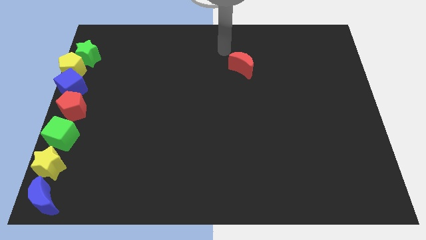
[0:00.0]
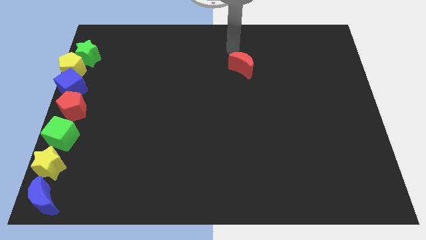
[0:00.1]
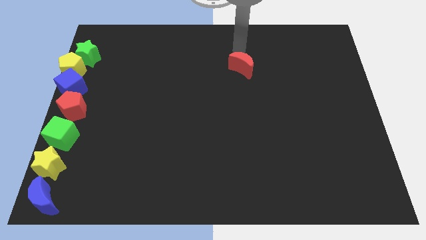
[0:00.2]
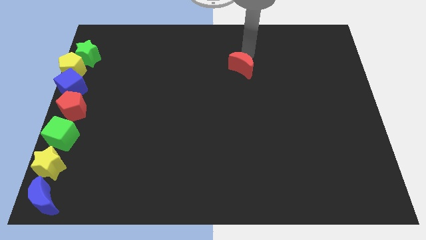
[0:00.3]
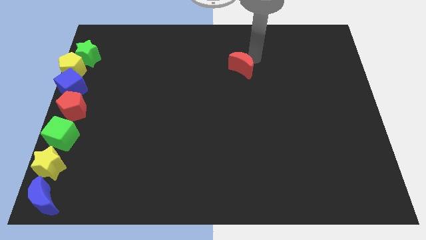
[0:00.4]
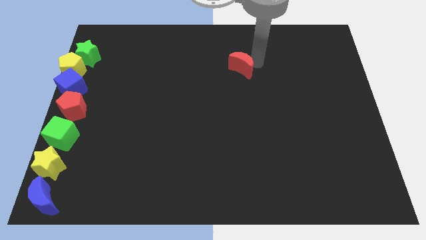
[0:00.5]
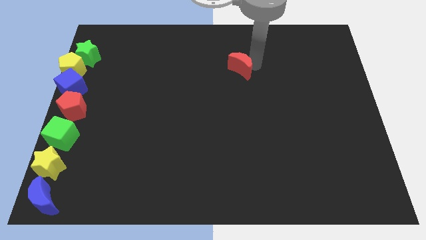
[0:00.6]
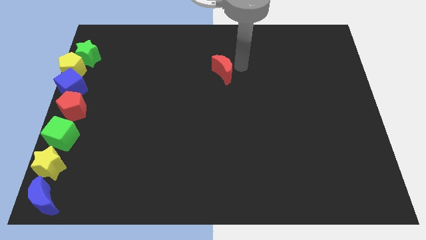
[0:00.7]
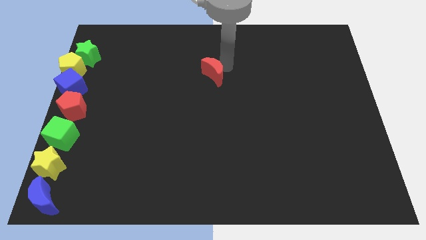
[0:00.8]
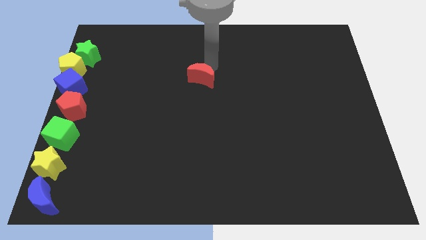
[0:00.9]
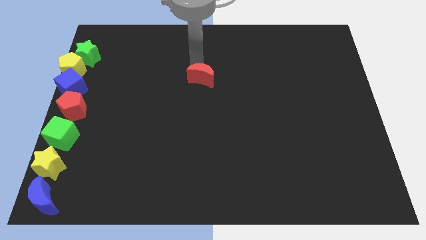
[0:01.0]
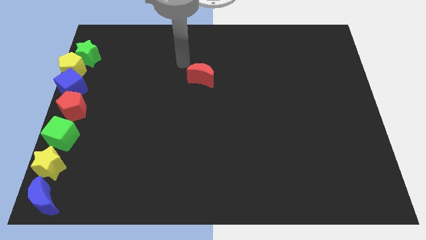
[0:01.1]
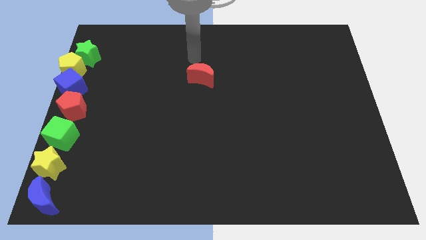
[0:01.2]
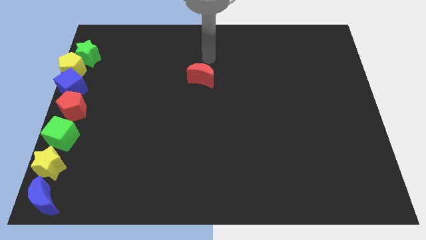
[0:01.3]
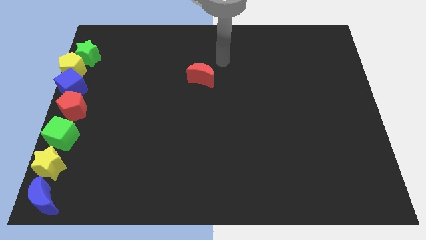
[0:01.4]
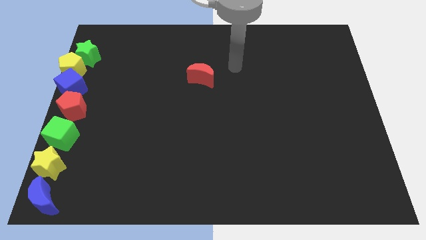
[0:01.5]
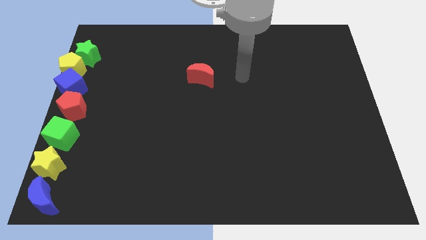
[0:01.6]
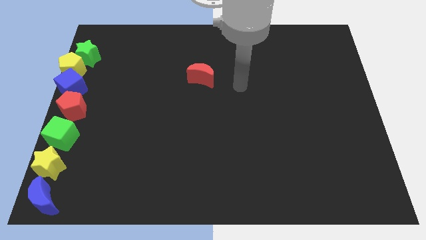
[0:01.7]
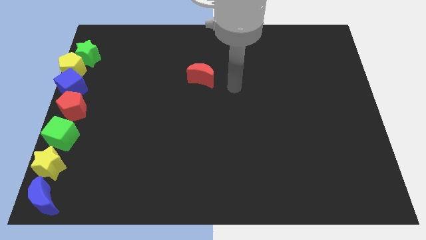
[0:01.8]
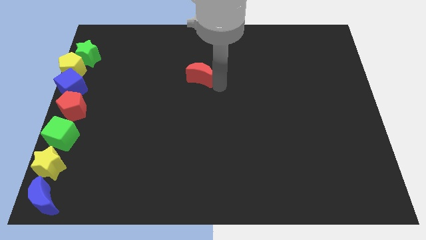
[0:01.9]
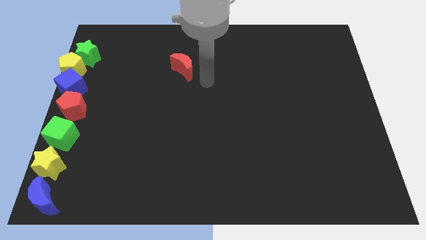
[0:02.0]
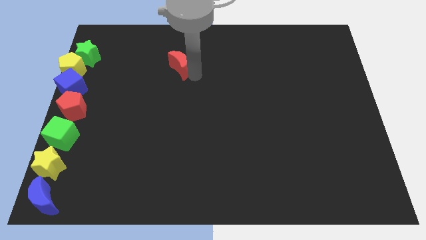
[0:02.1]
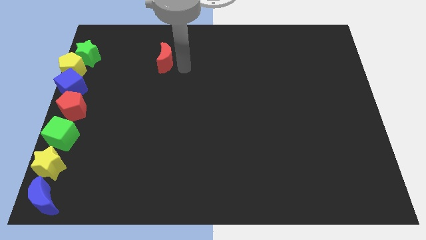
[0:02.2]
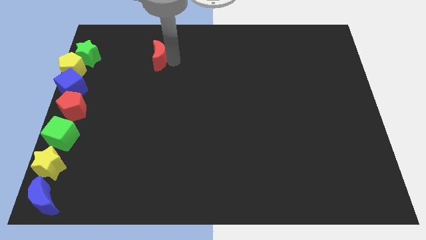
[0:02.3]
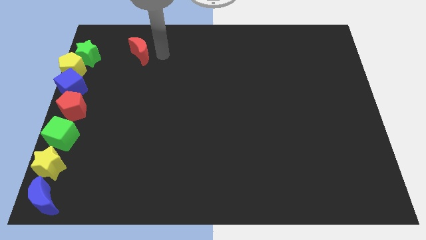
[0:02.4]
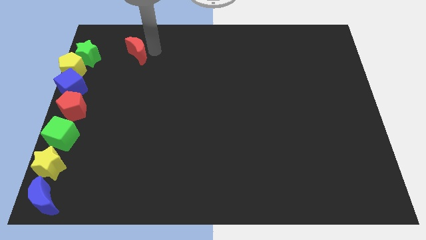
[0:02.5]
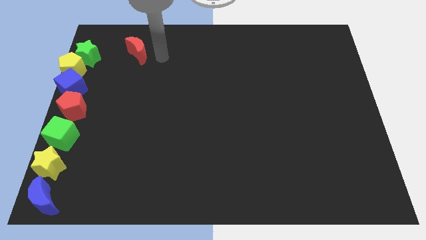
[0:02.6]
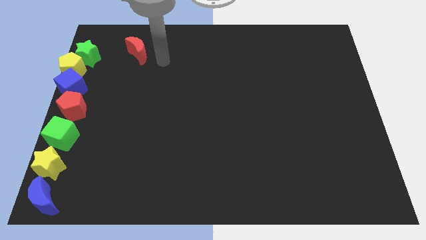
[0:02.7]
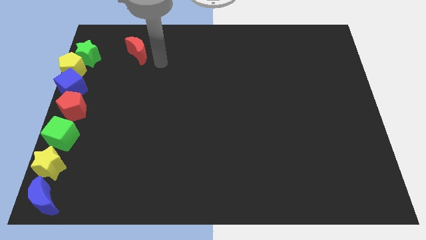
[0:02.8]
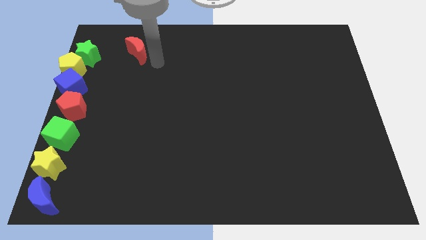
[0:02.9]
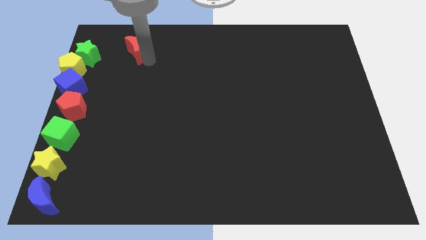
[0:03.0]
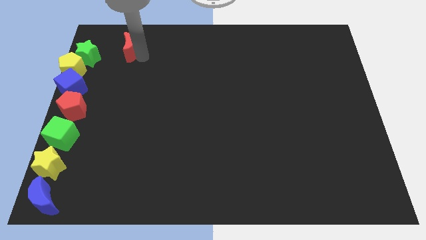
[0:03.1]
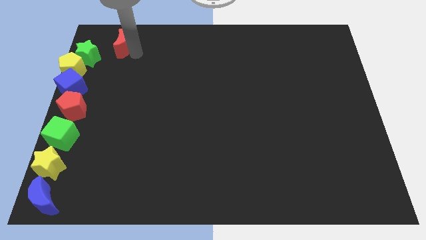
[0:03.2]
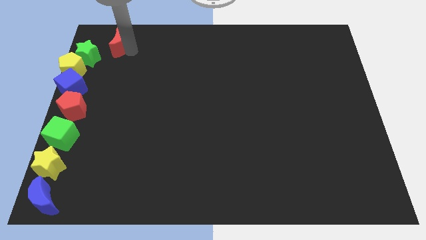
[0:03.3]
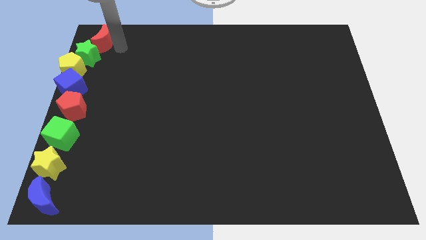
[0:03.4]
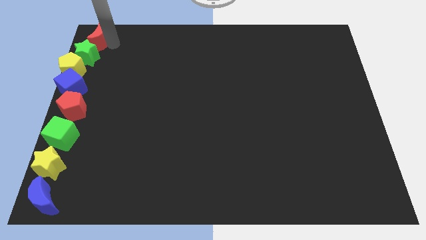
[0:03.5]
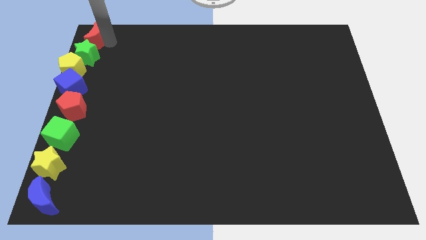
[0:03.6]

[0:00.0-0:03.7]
push the red moon into the green star

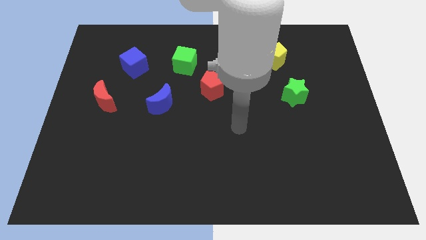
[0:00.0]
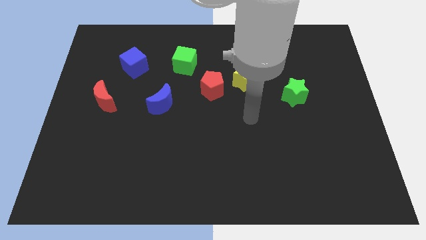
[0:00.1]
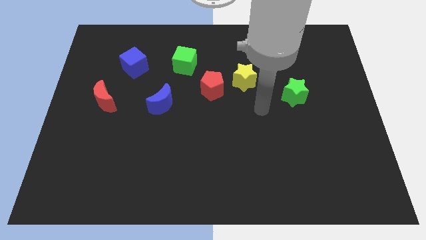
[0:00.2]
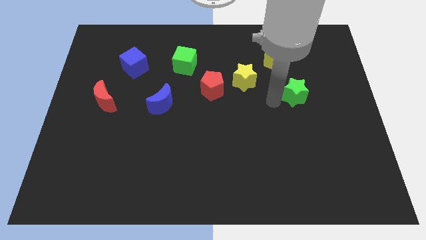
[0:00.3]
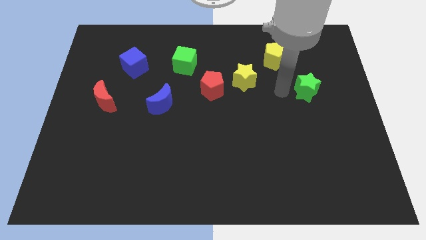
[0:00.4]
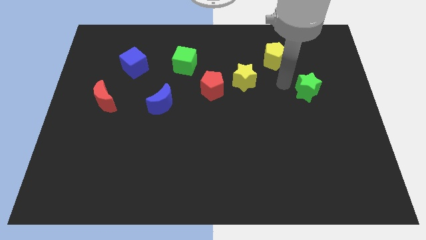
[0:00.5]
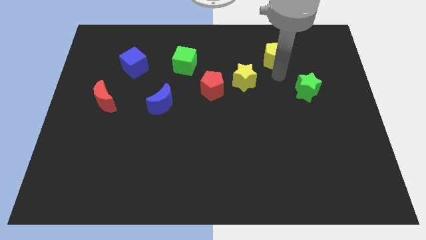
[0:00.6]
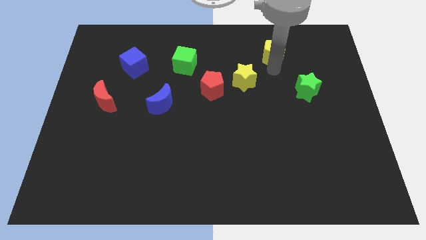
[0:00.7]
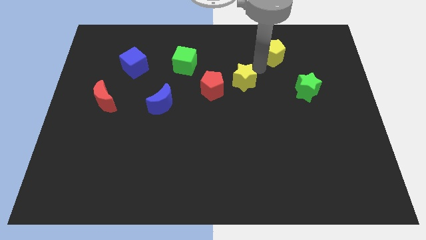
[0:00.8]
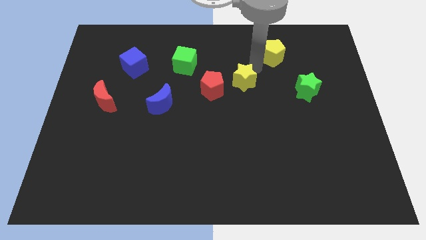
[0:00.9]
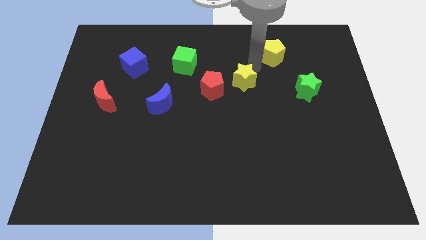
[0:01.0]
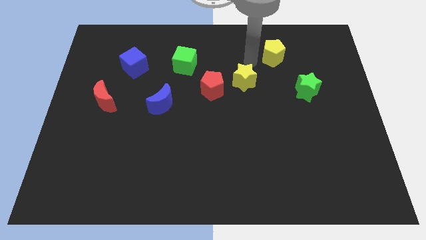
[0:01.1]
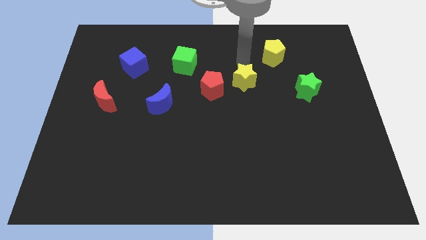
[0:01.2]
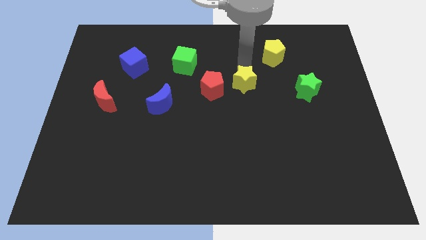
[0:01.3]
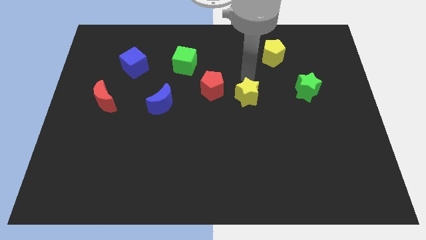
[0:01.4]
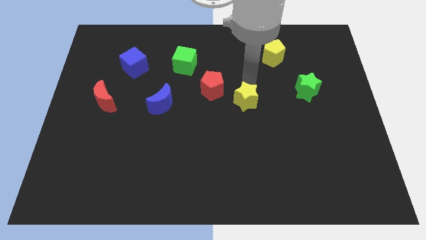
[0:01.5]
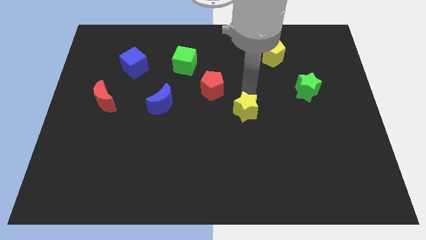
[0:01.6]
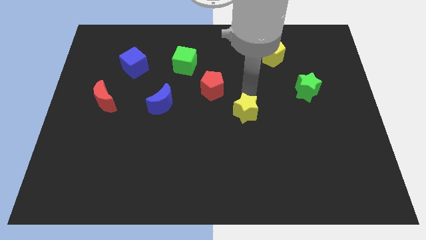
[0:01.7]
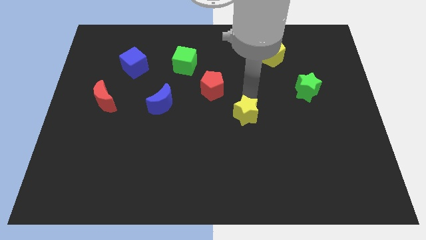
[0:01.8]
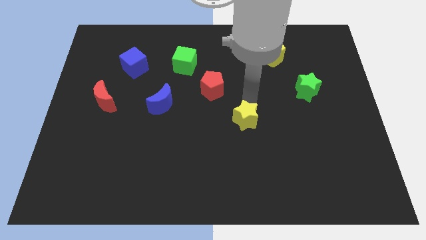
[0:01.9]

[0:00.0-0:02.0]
push the yellow star slightly to the bottom

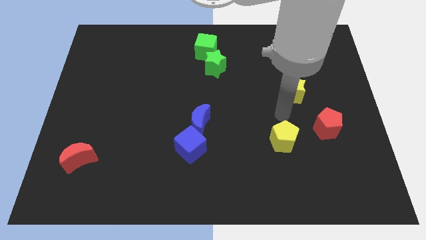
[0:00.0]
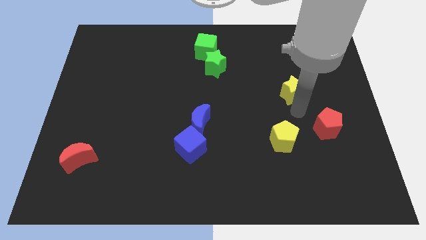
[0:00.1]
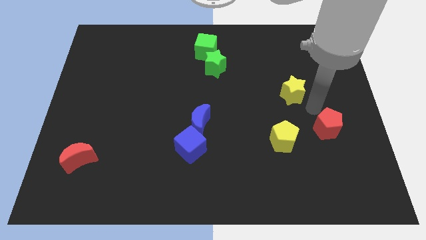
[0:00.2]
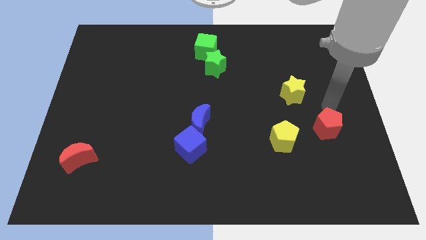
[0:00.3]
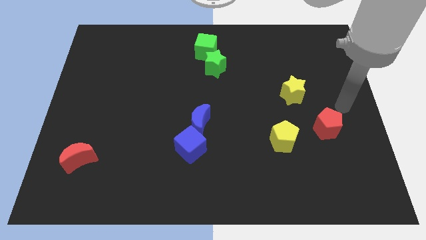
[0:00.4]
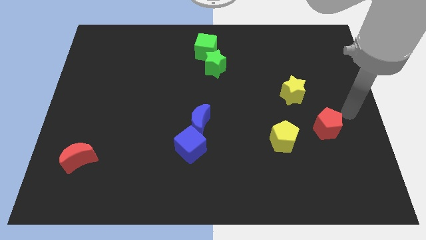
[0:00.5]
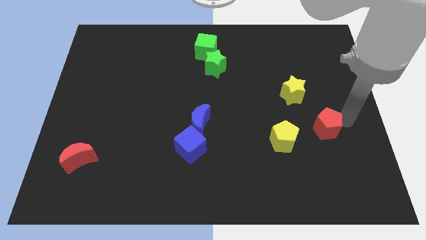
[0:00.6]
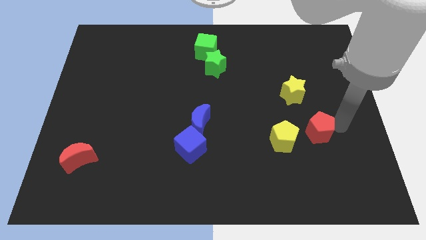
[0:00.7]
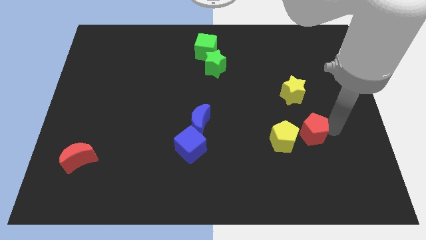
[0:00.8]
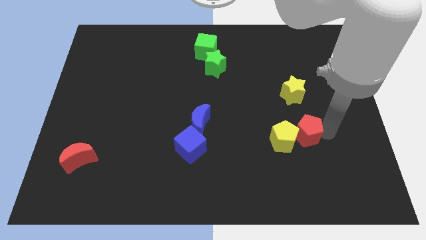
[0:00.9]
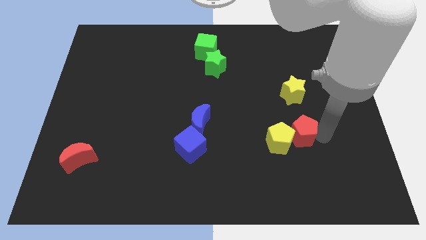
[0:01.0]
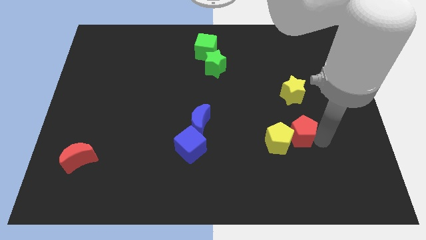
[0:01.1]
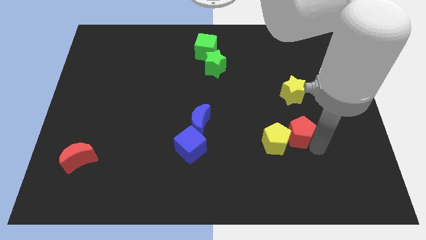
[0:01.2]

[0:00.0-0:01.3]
push the red pentagon into yellow pentagon

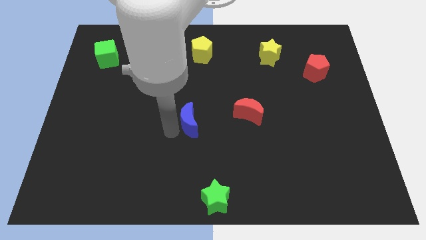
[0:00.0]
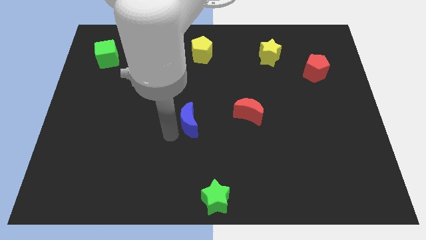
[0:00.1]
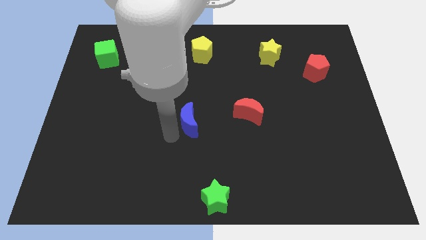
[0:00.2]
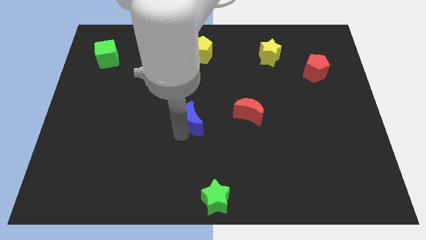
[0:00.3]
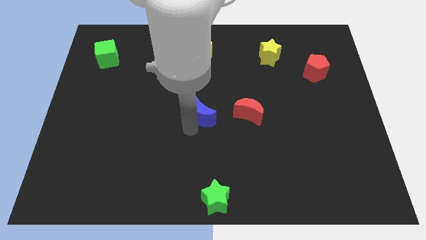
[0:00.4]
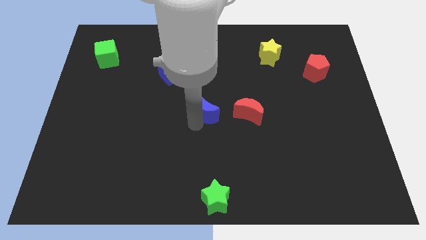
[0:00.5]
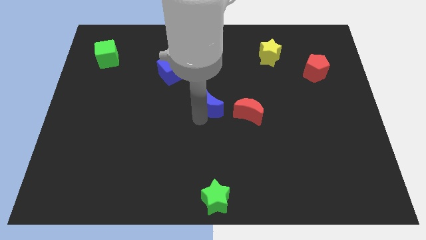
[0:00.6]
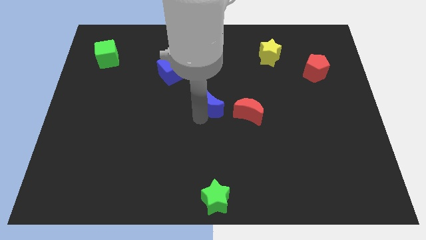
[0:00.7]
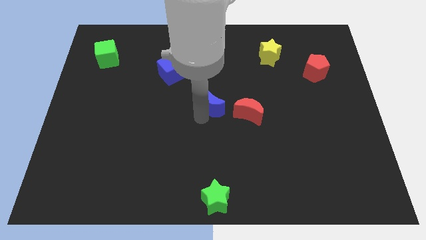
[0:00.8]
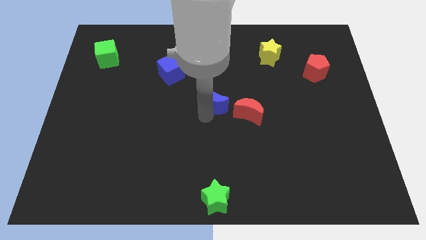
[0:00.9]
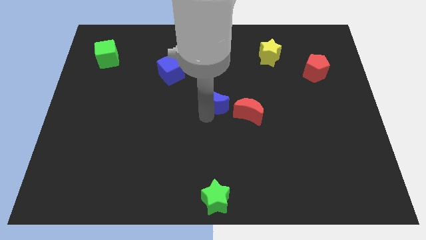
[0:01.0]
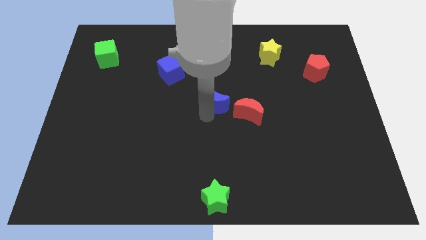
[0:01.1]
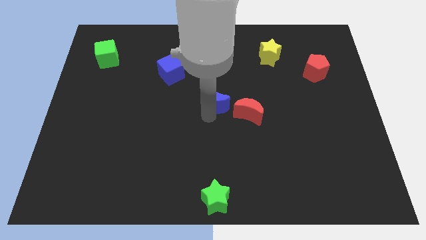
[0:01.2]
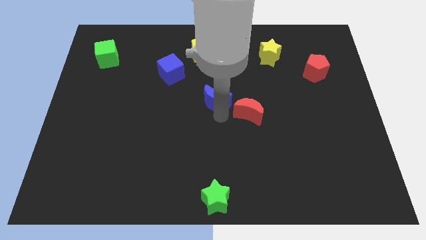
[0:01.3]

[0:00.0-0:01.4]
place blue crescent left to red crescent

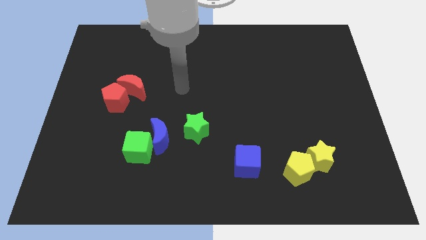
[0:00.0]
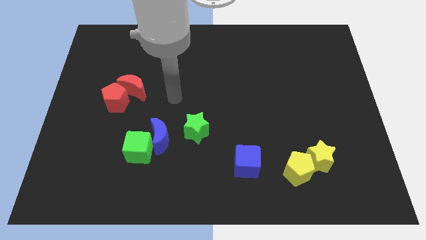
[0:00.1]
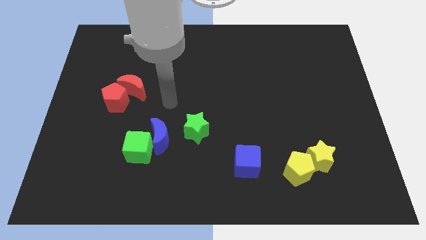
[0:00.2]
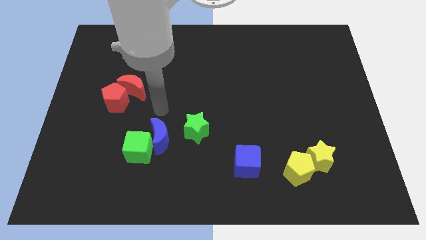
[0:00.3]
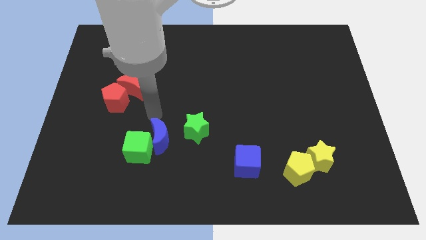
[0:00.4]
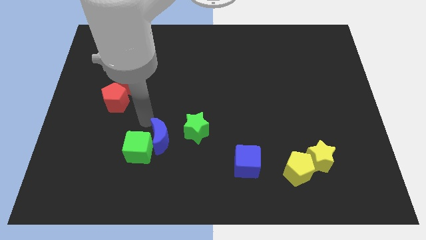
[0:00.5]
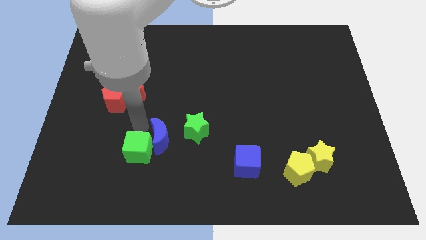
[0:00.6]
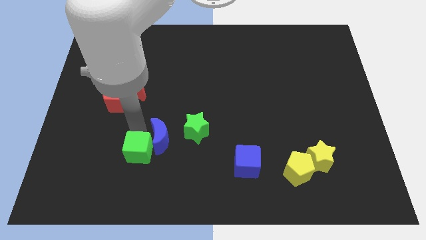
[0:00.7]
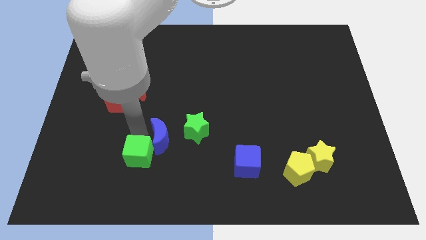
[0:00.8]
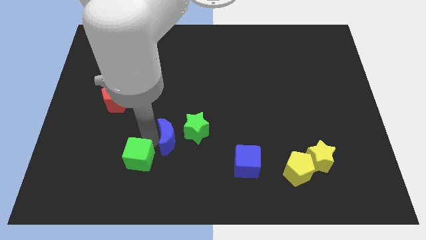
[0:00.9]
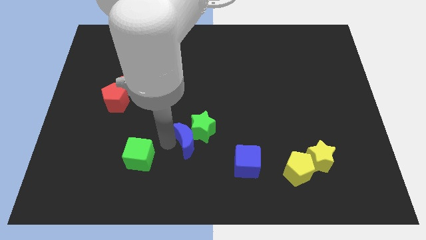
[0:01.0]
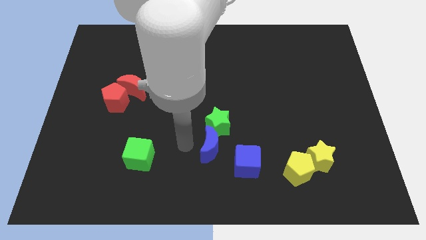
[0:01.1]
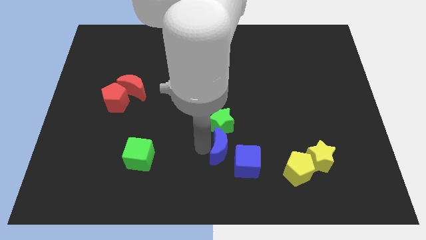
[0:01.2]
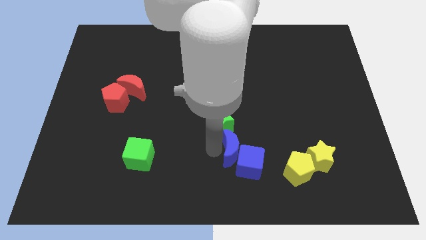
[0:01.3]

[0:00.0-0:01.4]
move the blue moon towards the blue cube
